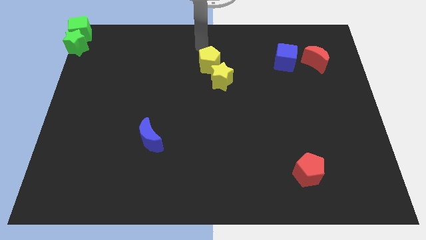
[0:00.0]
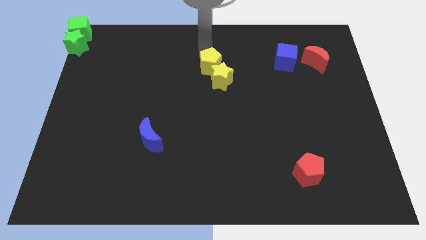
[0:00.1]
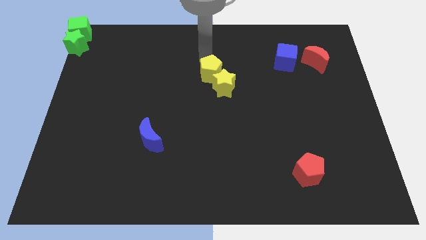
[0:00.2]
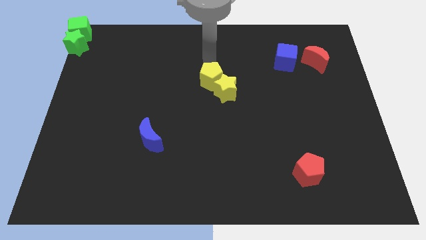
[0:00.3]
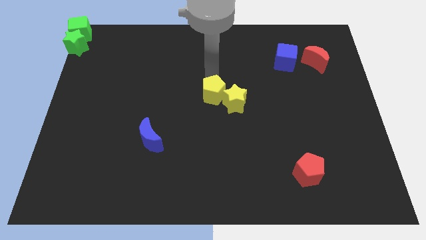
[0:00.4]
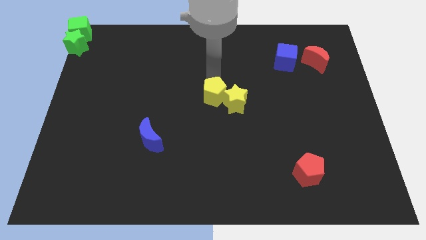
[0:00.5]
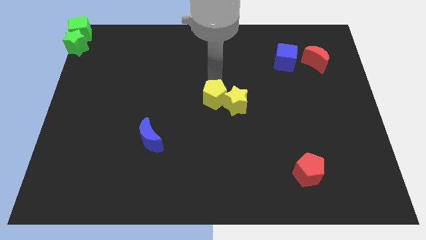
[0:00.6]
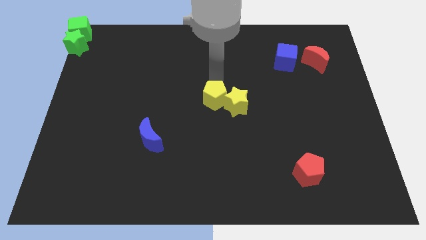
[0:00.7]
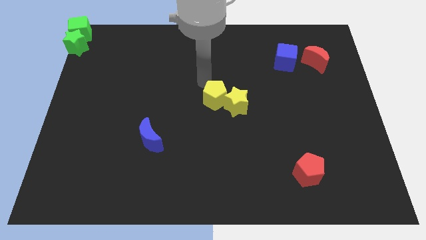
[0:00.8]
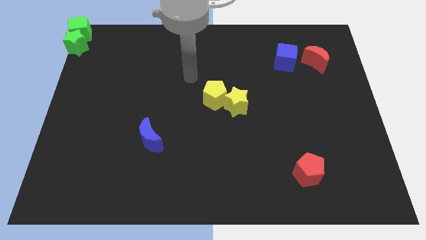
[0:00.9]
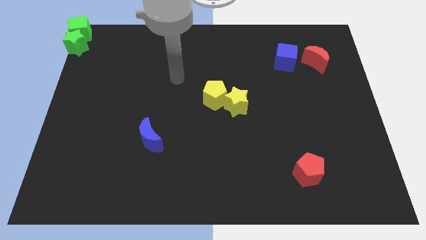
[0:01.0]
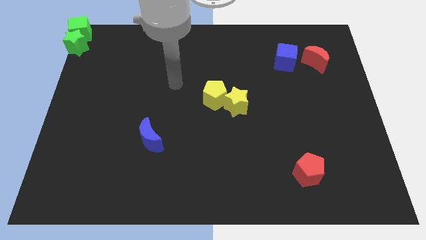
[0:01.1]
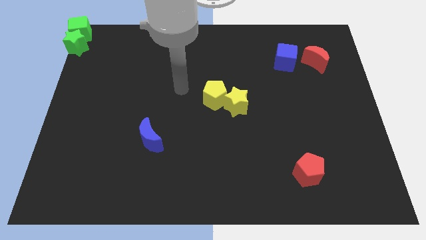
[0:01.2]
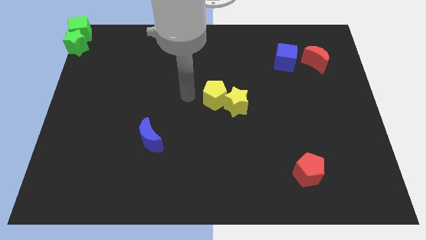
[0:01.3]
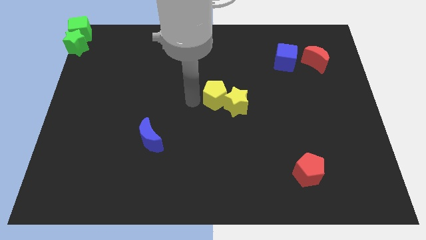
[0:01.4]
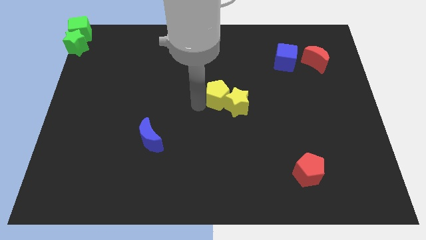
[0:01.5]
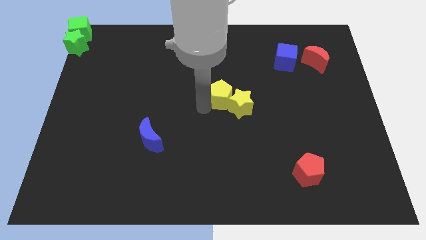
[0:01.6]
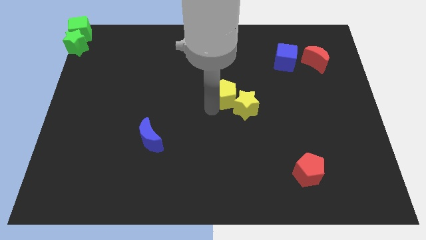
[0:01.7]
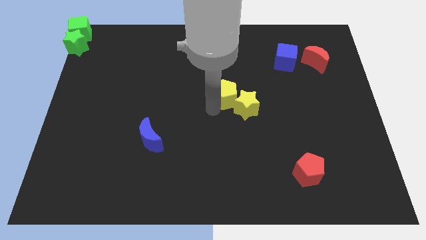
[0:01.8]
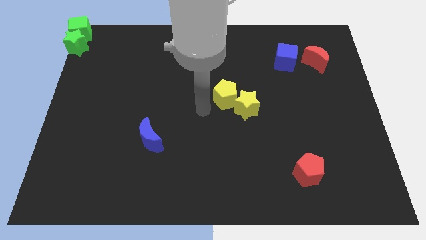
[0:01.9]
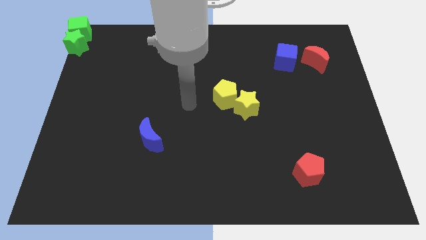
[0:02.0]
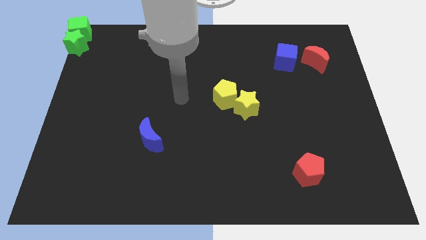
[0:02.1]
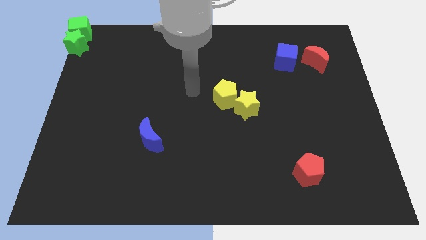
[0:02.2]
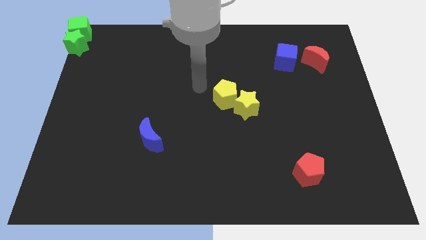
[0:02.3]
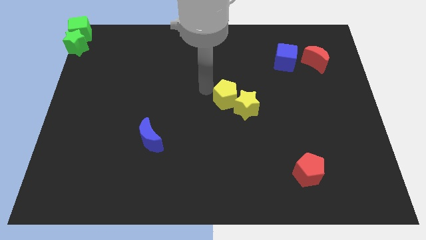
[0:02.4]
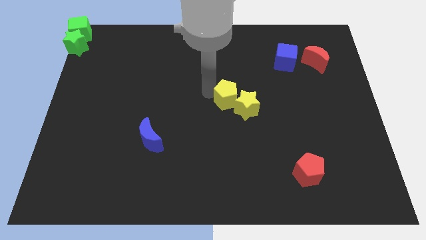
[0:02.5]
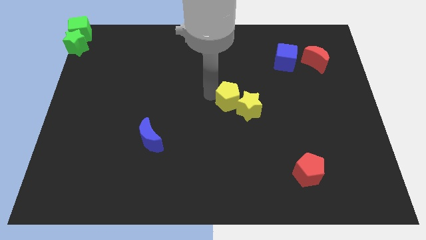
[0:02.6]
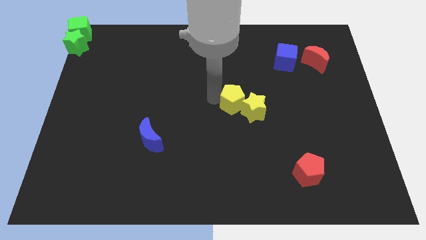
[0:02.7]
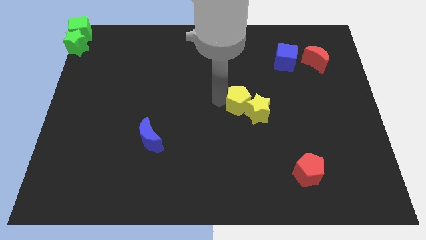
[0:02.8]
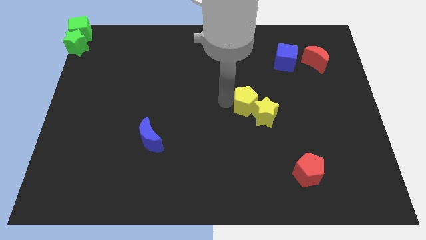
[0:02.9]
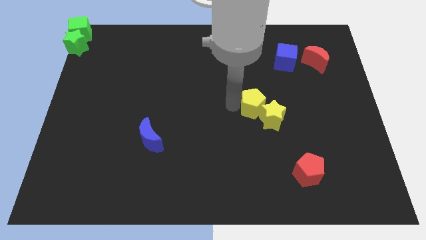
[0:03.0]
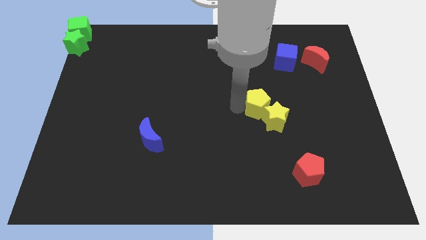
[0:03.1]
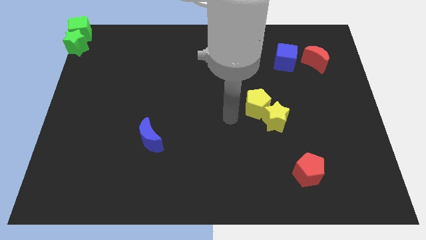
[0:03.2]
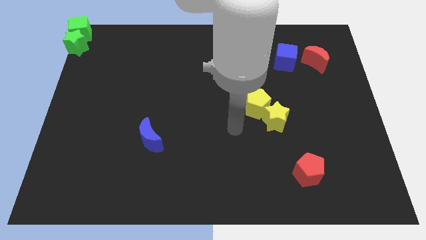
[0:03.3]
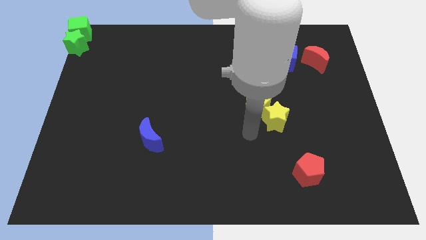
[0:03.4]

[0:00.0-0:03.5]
push the yellow pentagon into the yellow star

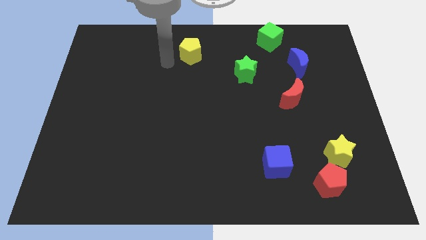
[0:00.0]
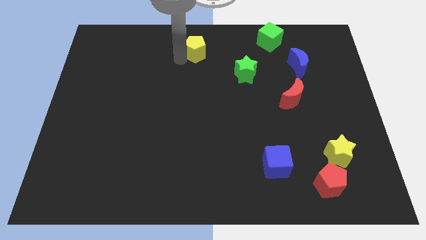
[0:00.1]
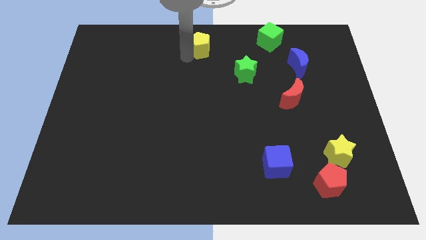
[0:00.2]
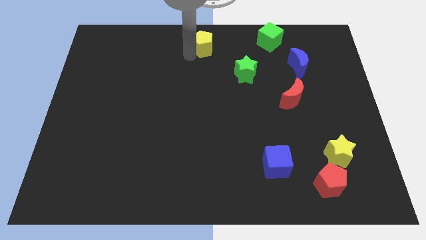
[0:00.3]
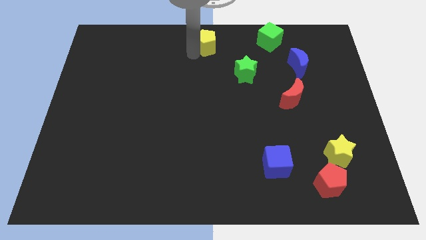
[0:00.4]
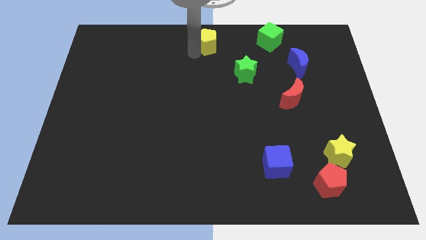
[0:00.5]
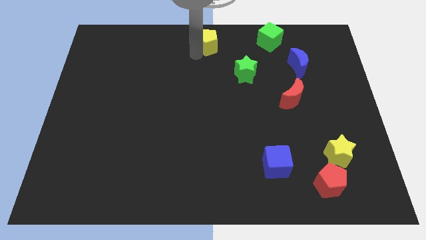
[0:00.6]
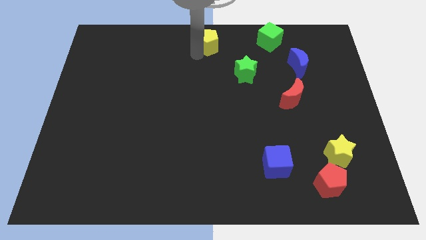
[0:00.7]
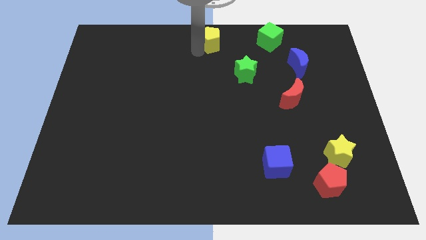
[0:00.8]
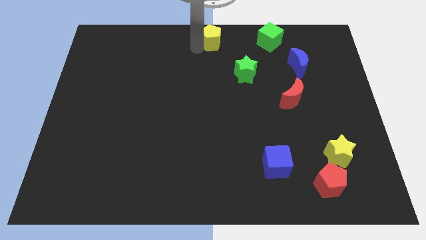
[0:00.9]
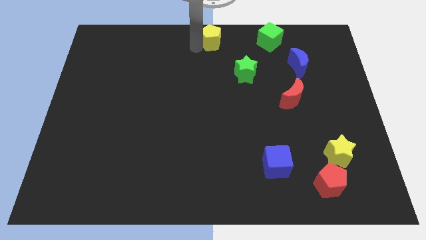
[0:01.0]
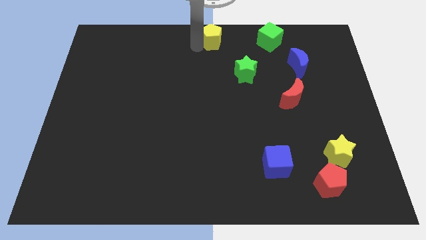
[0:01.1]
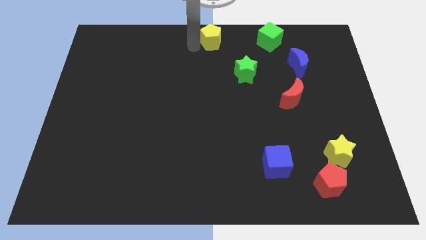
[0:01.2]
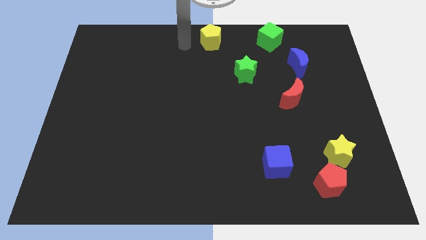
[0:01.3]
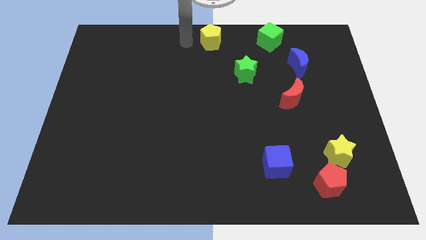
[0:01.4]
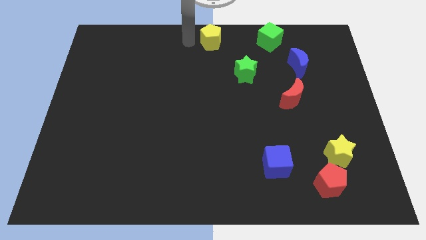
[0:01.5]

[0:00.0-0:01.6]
move the yellow pentagon to the top center of the board

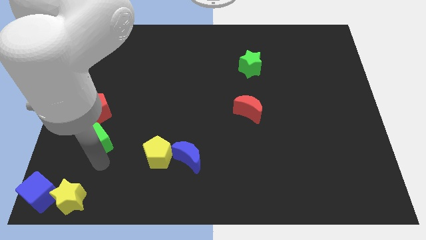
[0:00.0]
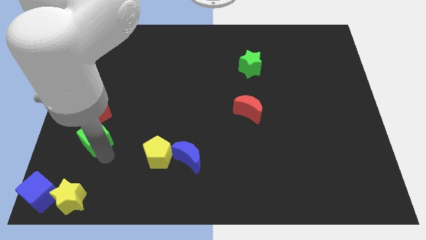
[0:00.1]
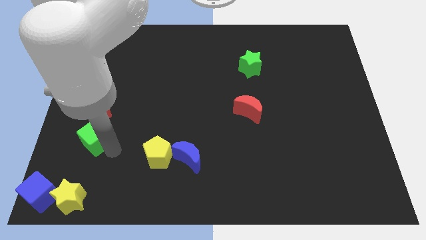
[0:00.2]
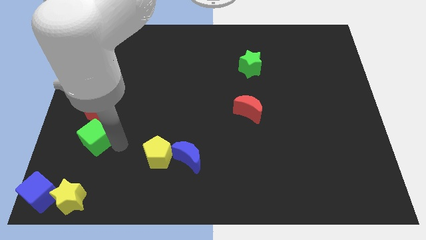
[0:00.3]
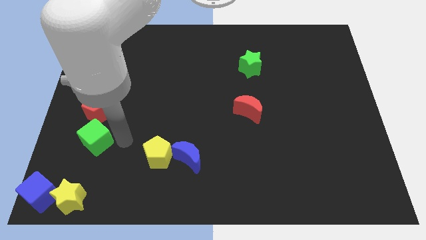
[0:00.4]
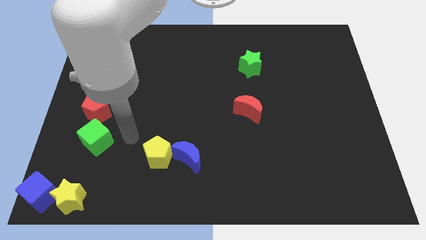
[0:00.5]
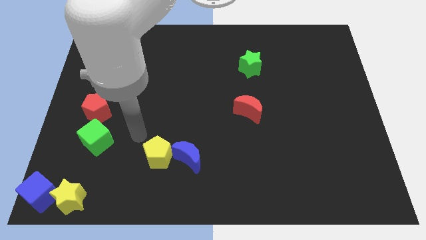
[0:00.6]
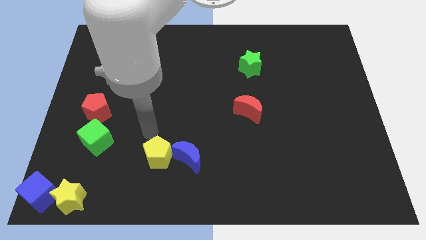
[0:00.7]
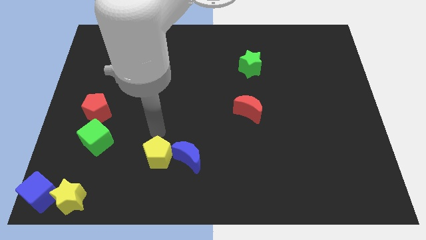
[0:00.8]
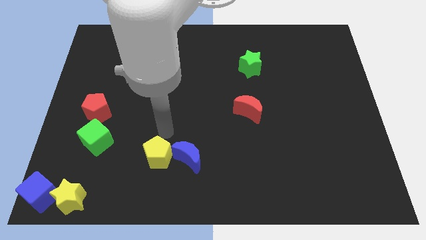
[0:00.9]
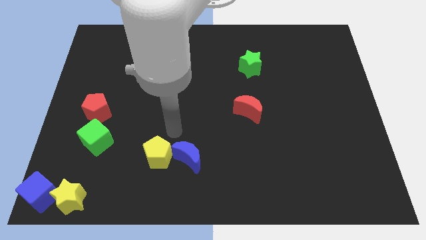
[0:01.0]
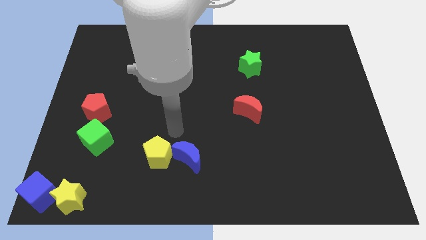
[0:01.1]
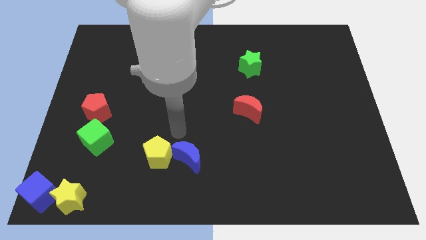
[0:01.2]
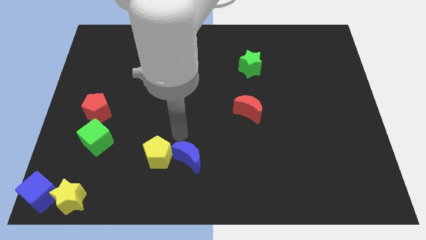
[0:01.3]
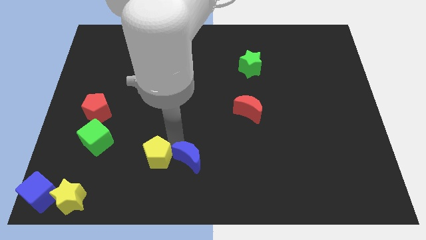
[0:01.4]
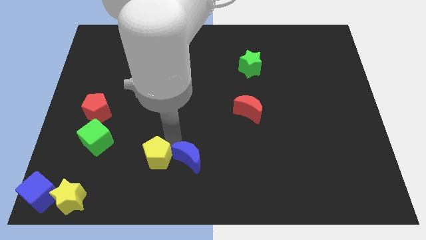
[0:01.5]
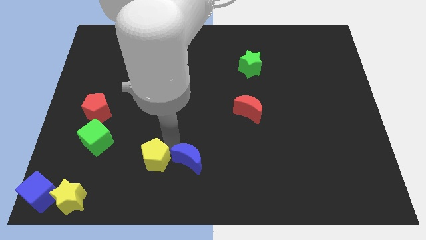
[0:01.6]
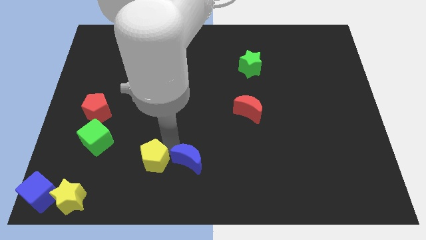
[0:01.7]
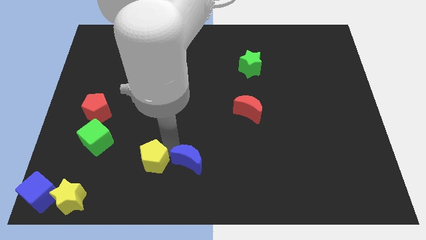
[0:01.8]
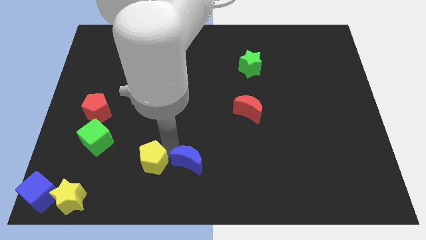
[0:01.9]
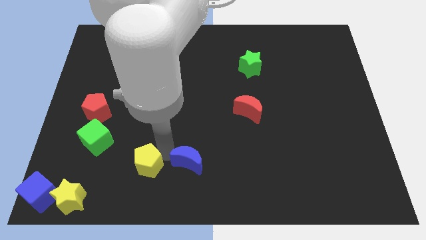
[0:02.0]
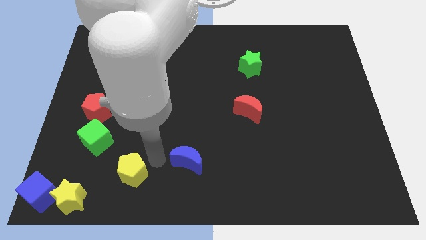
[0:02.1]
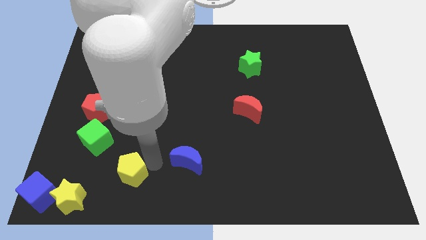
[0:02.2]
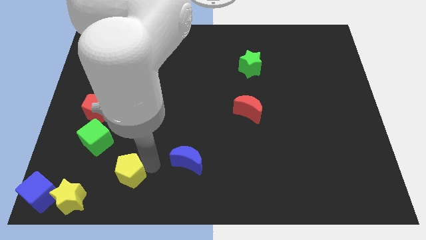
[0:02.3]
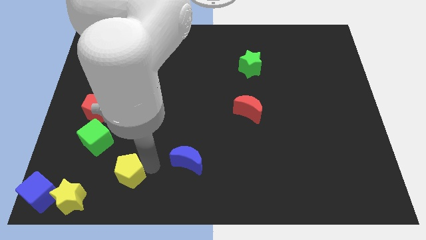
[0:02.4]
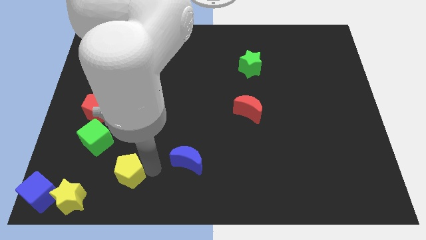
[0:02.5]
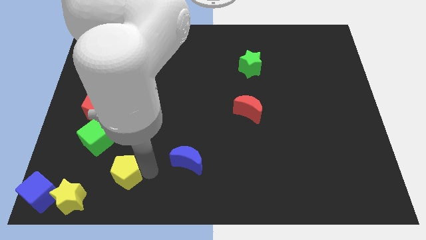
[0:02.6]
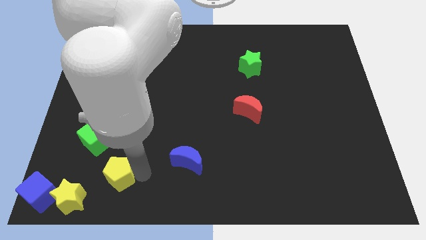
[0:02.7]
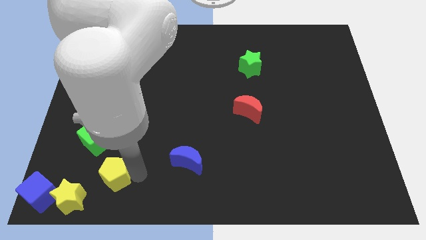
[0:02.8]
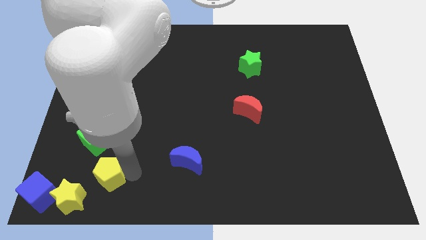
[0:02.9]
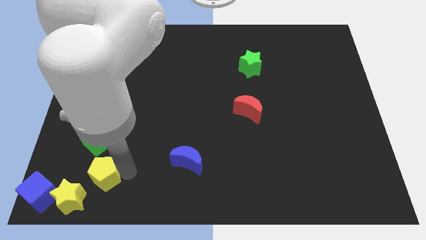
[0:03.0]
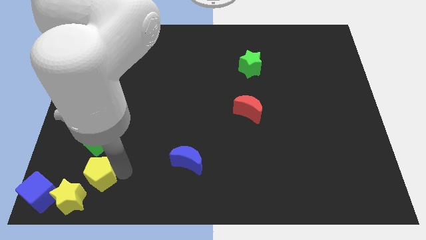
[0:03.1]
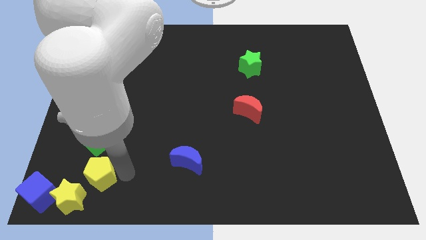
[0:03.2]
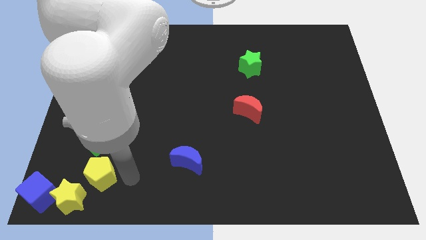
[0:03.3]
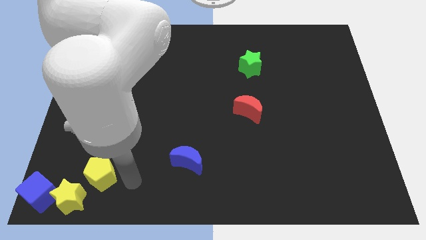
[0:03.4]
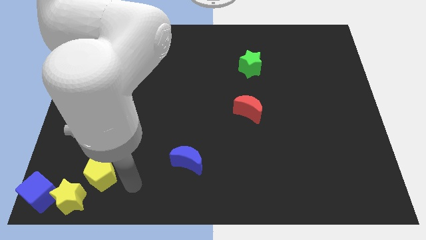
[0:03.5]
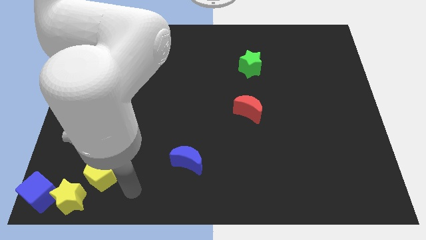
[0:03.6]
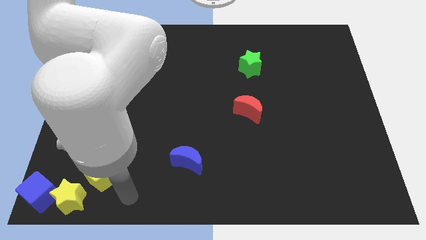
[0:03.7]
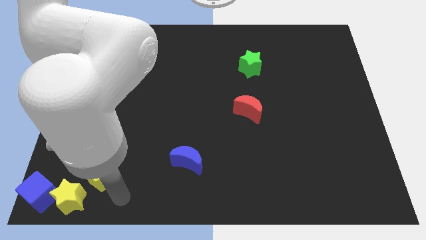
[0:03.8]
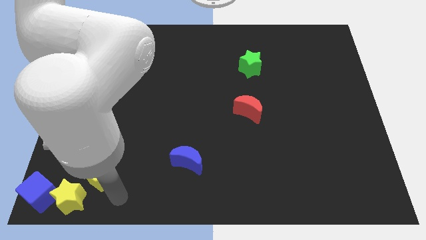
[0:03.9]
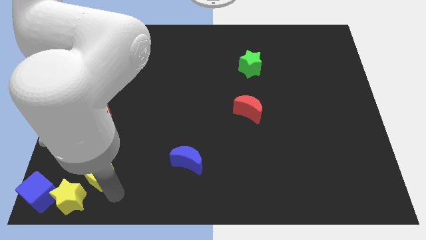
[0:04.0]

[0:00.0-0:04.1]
separate the yellow pentagon from the blue moon
